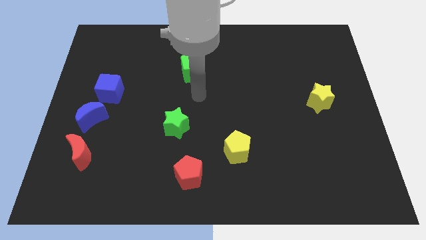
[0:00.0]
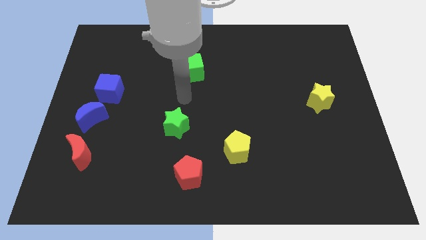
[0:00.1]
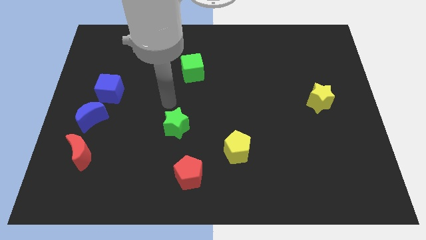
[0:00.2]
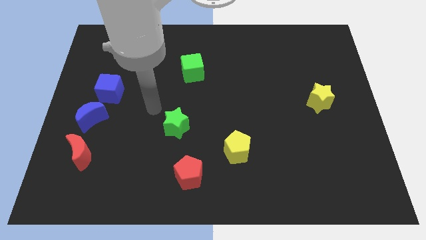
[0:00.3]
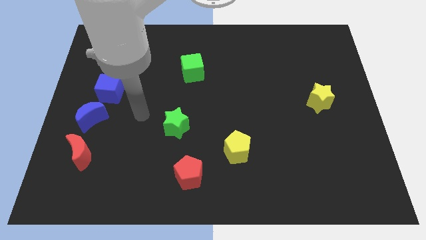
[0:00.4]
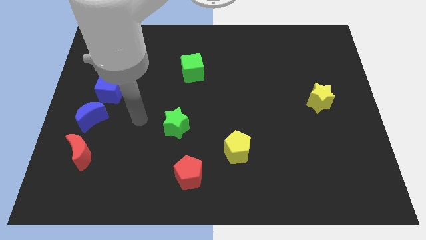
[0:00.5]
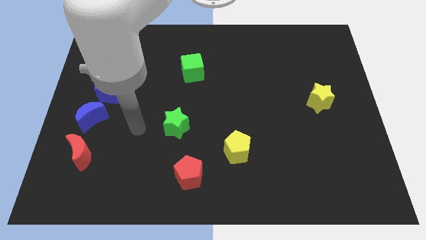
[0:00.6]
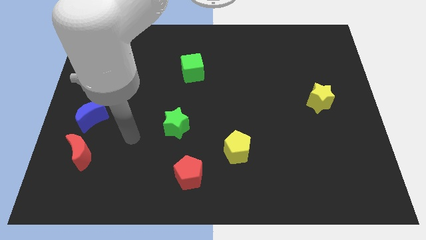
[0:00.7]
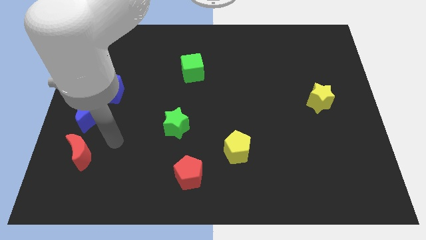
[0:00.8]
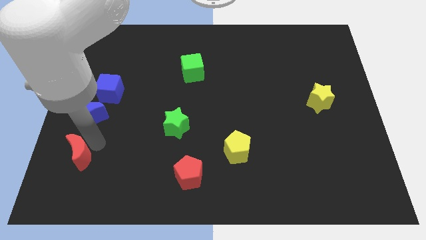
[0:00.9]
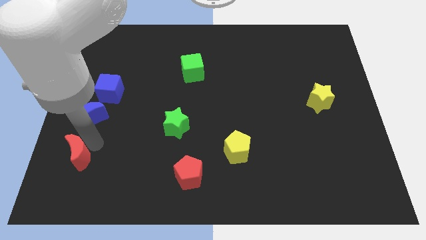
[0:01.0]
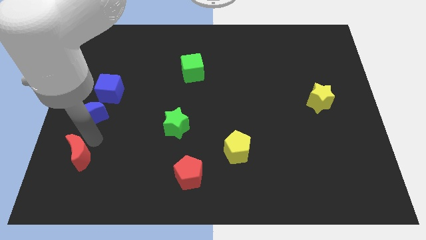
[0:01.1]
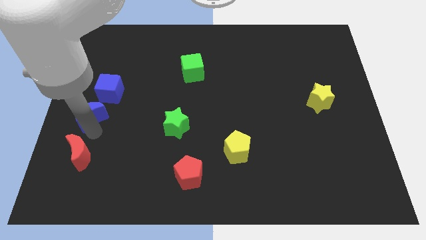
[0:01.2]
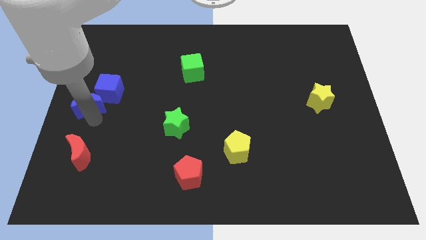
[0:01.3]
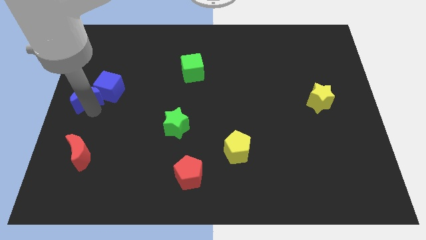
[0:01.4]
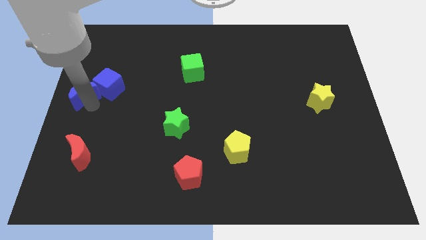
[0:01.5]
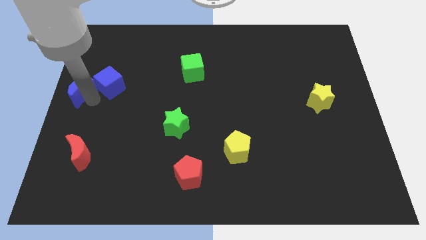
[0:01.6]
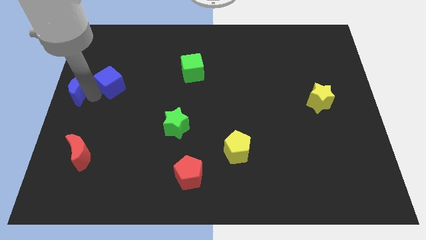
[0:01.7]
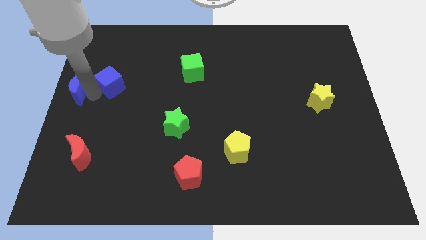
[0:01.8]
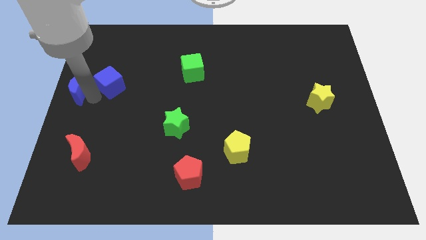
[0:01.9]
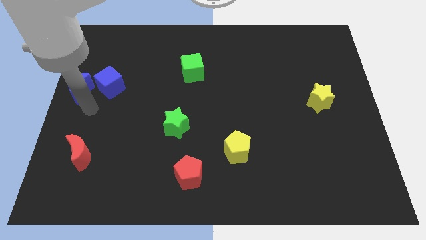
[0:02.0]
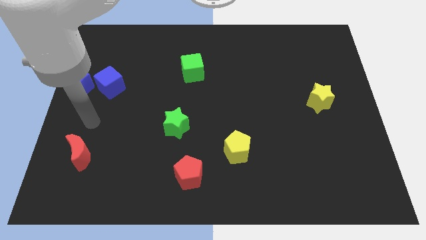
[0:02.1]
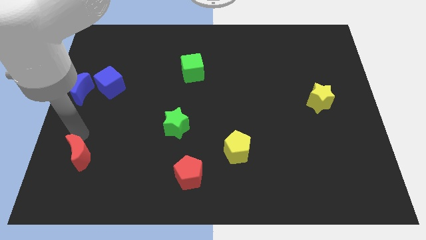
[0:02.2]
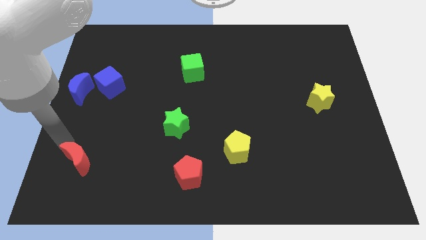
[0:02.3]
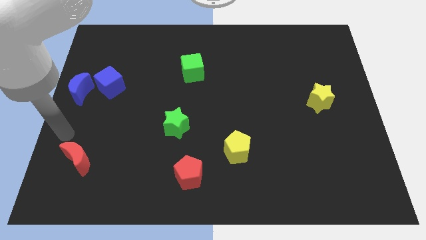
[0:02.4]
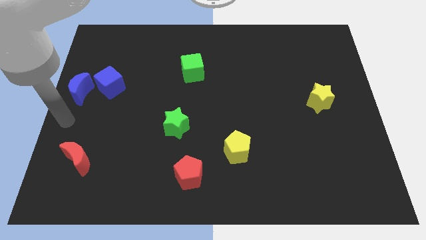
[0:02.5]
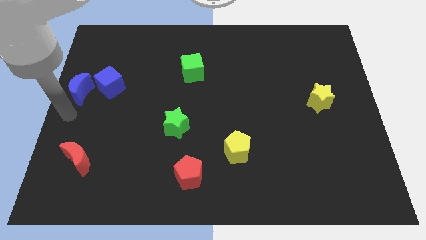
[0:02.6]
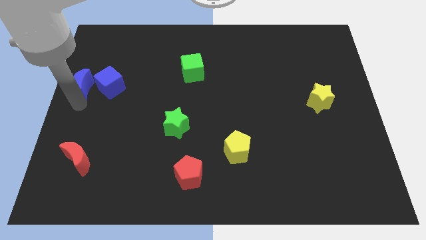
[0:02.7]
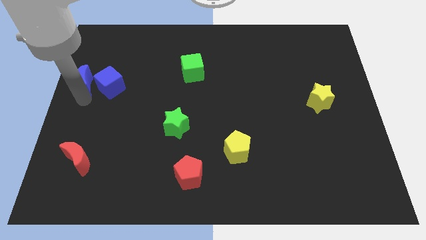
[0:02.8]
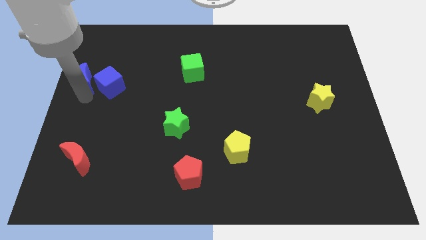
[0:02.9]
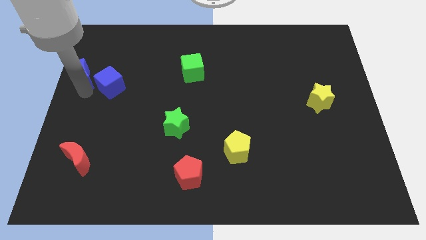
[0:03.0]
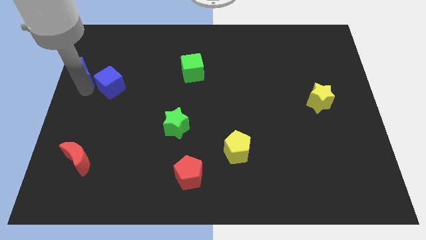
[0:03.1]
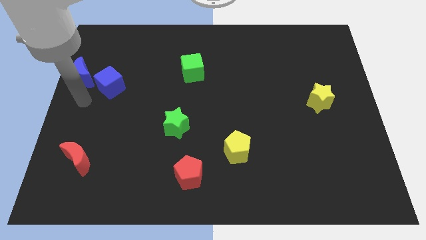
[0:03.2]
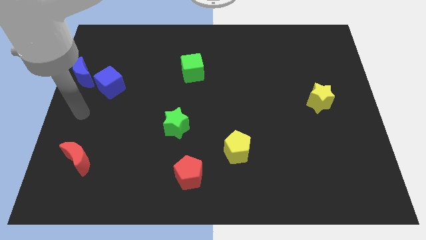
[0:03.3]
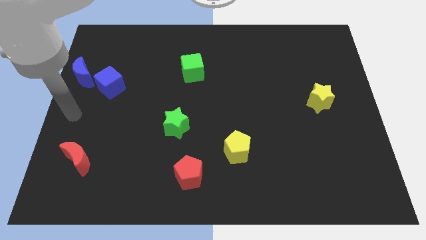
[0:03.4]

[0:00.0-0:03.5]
move the blue moon towards top

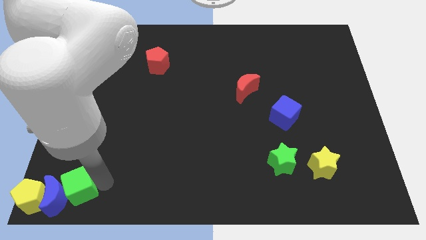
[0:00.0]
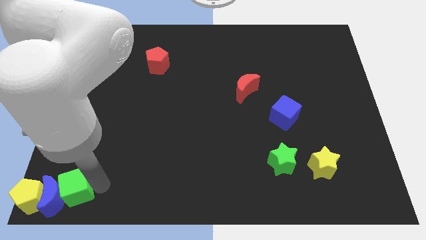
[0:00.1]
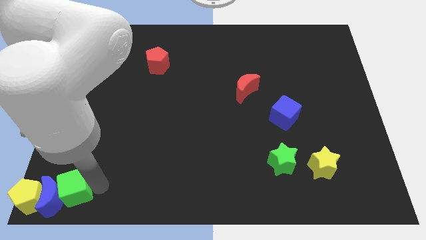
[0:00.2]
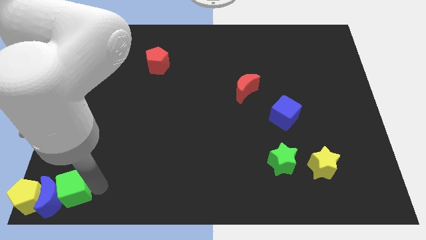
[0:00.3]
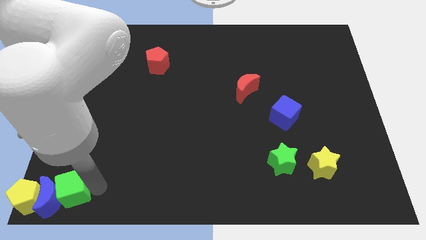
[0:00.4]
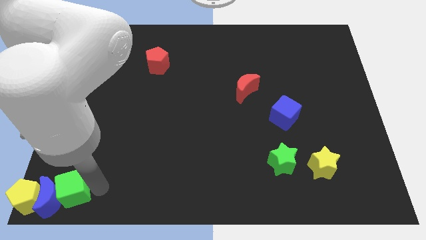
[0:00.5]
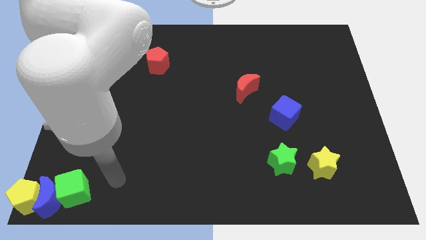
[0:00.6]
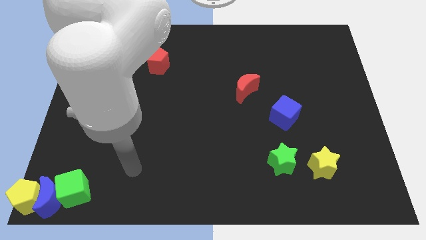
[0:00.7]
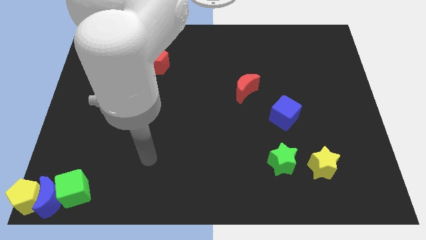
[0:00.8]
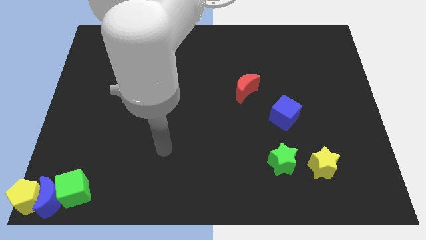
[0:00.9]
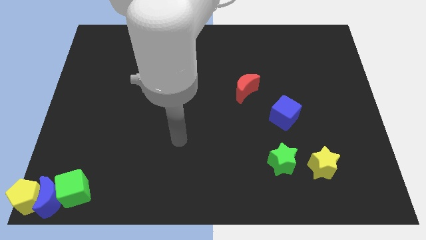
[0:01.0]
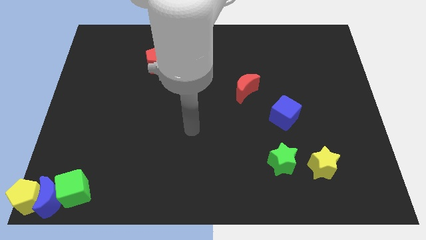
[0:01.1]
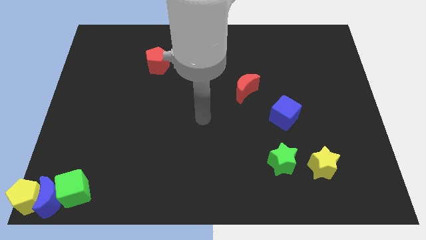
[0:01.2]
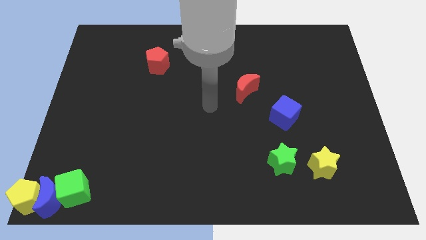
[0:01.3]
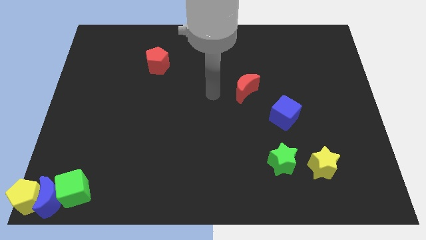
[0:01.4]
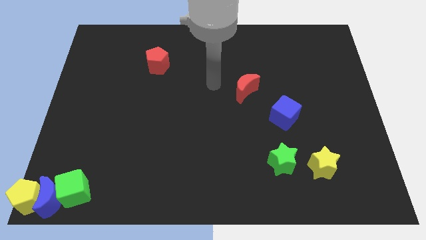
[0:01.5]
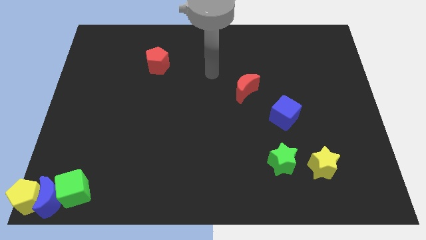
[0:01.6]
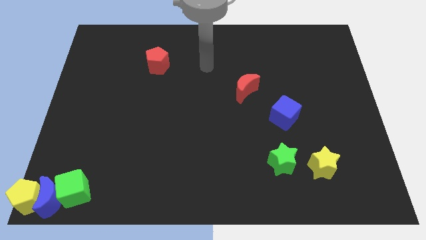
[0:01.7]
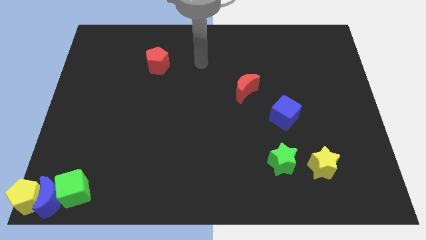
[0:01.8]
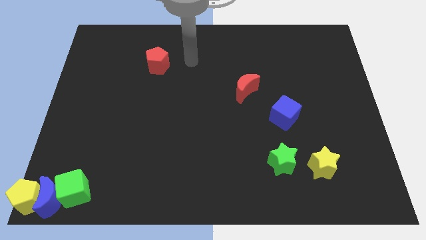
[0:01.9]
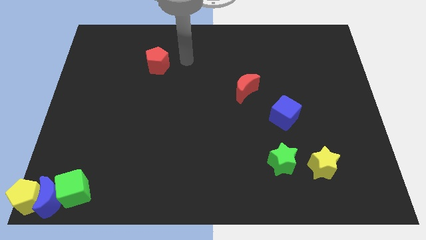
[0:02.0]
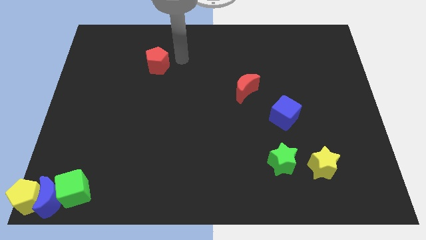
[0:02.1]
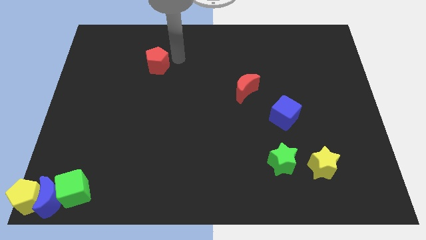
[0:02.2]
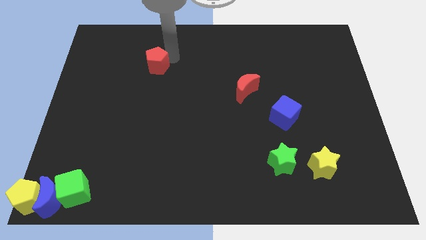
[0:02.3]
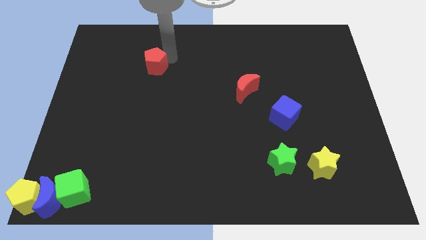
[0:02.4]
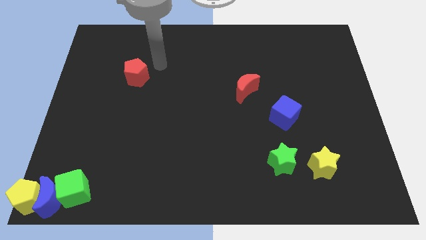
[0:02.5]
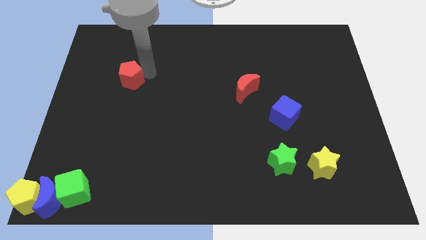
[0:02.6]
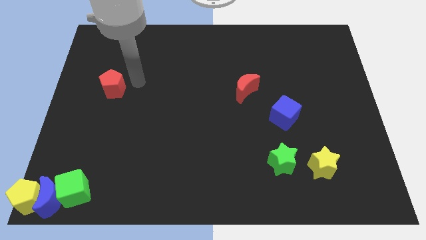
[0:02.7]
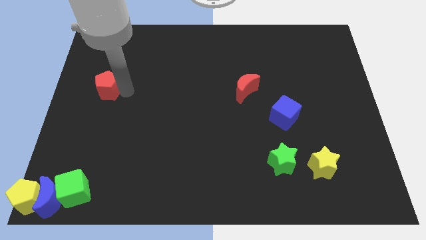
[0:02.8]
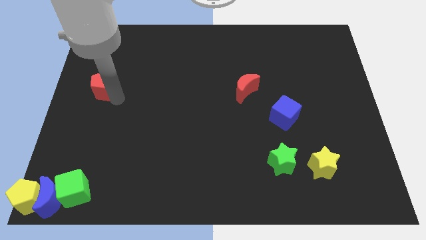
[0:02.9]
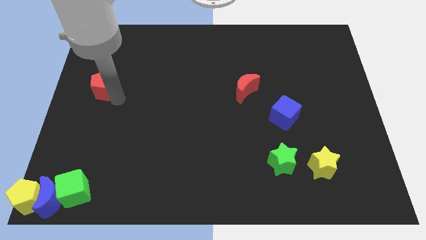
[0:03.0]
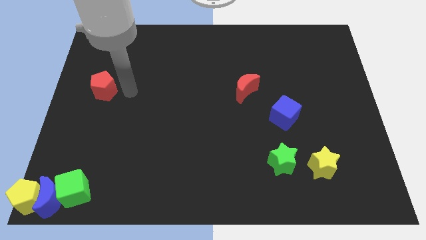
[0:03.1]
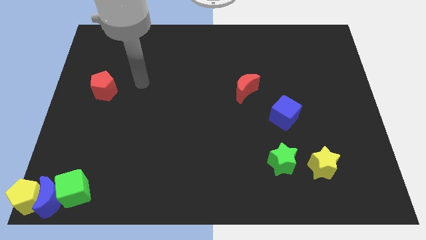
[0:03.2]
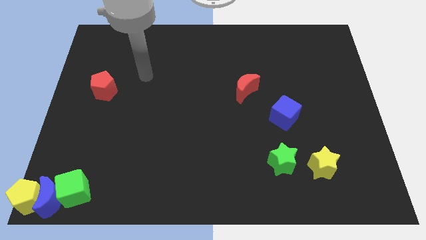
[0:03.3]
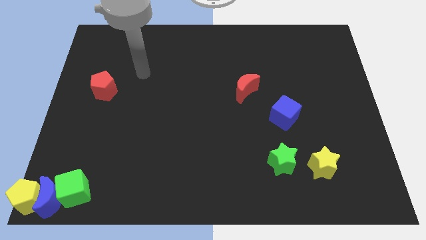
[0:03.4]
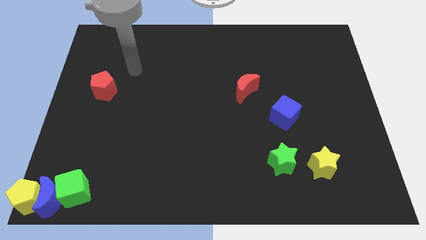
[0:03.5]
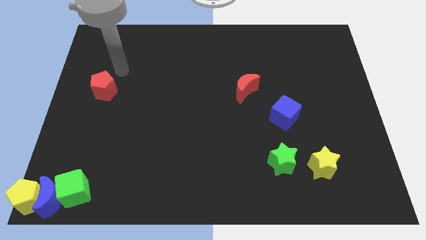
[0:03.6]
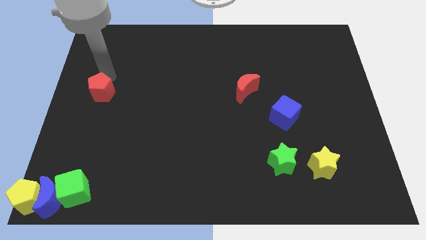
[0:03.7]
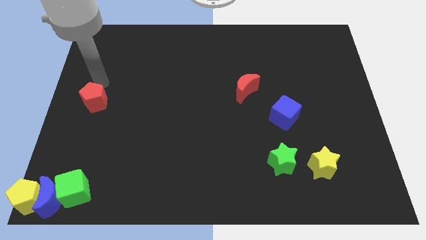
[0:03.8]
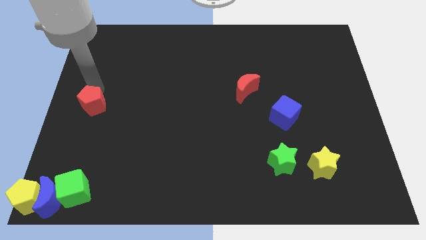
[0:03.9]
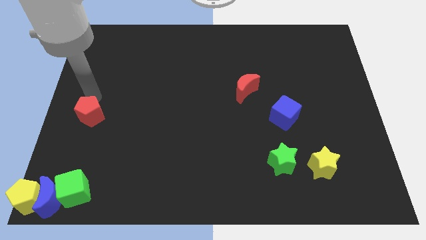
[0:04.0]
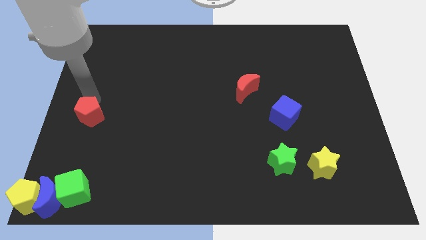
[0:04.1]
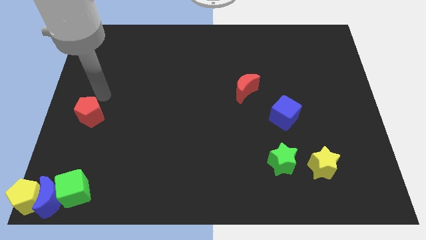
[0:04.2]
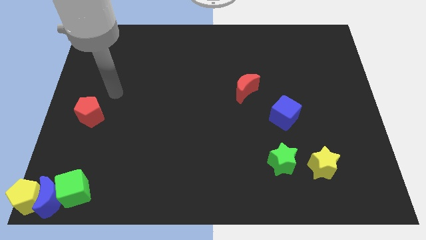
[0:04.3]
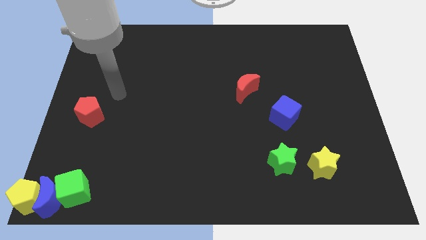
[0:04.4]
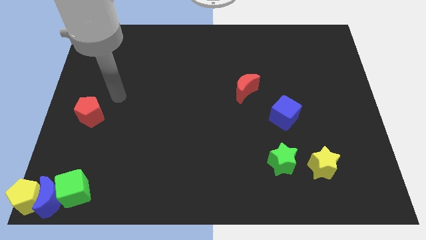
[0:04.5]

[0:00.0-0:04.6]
move red pentagon downwards

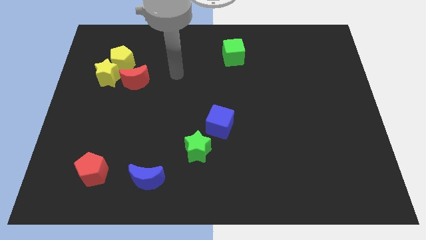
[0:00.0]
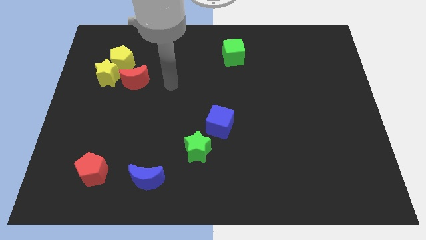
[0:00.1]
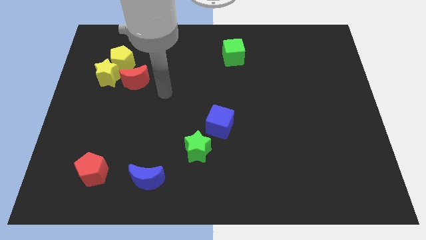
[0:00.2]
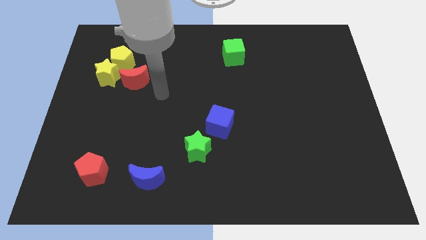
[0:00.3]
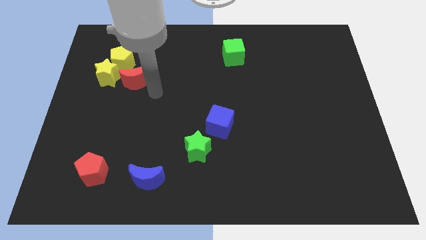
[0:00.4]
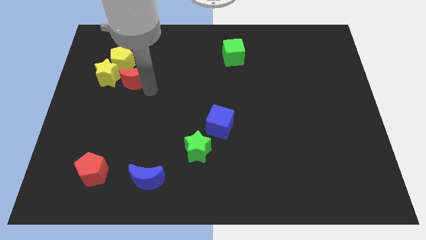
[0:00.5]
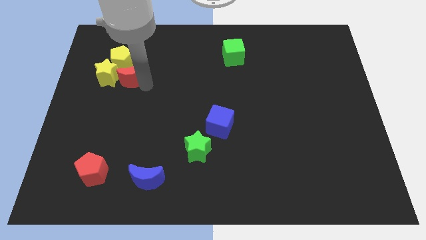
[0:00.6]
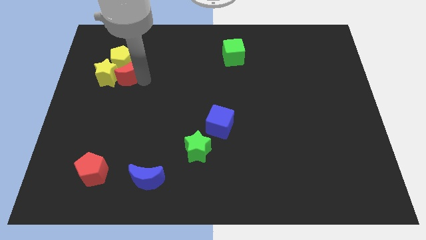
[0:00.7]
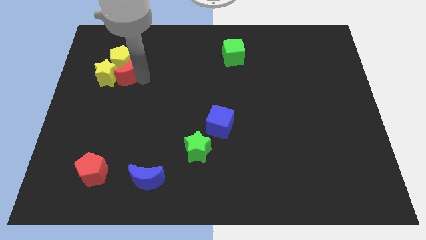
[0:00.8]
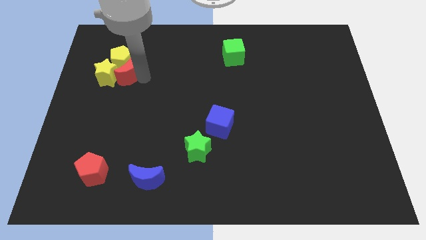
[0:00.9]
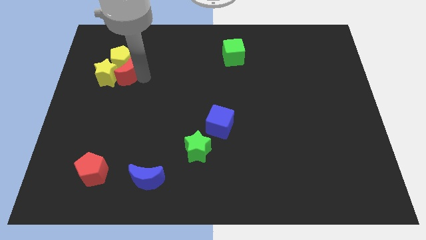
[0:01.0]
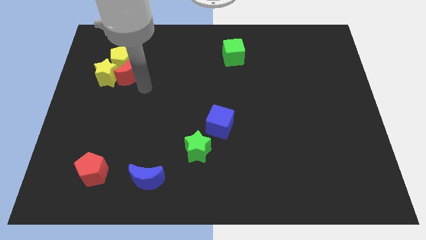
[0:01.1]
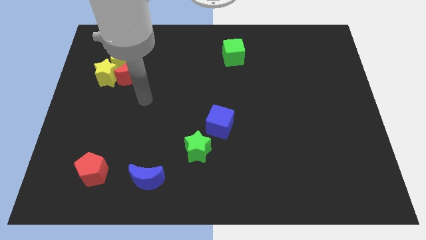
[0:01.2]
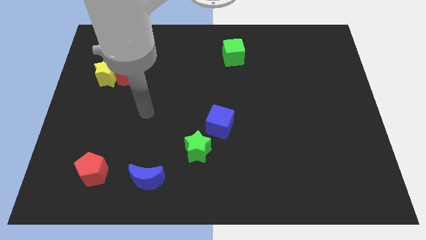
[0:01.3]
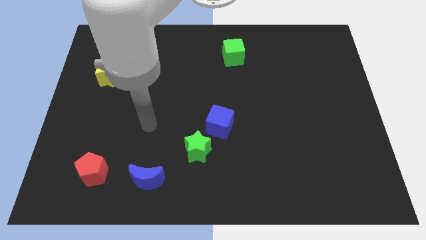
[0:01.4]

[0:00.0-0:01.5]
push the red moon into the yellow pentagon
